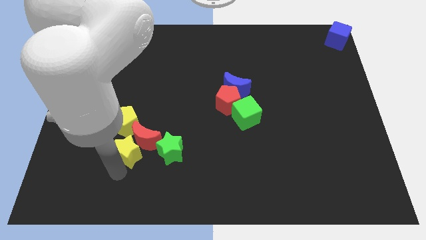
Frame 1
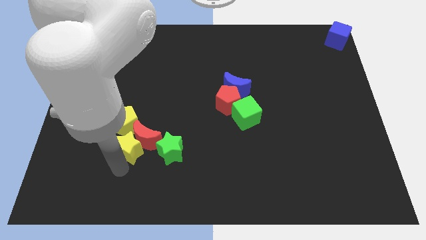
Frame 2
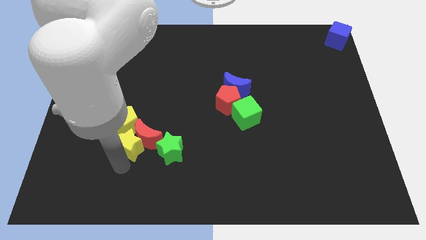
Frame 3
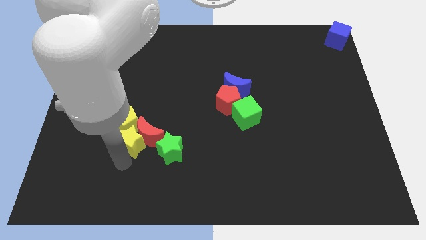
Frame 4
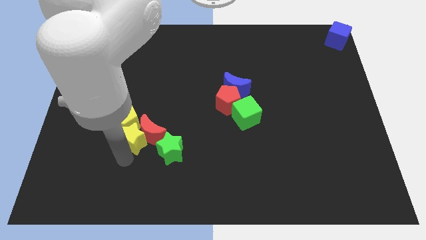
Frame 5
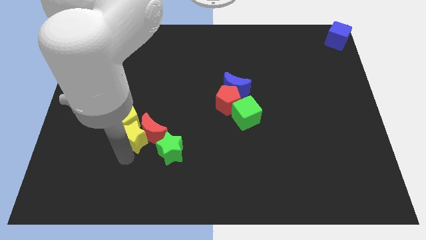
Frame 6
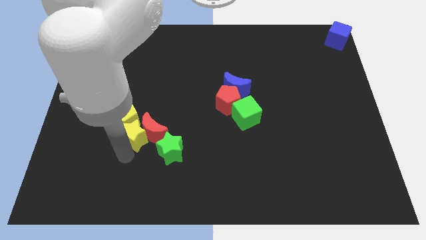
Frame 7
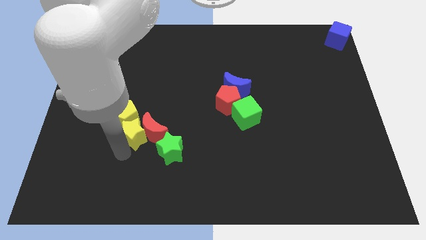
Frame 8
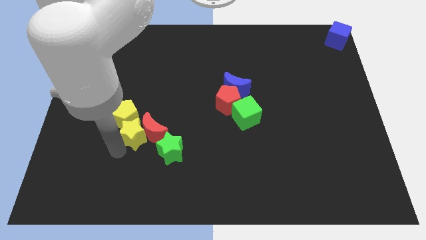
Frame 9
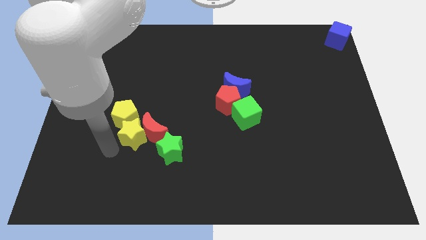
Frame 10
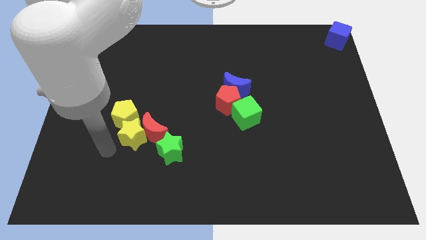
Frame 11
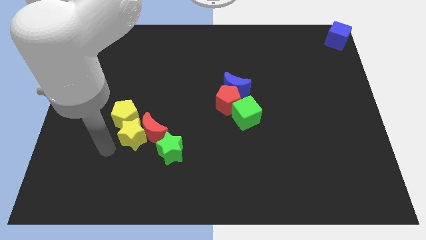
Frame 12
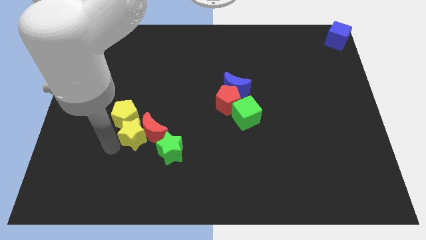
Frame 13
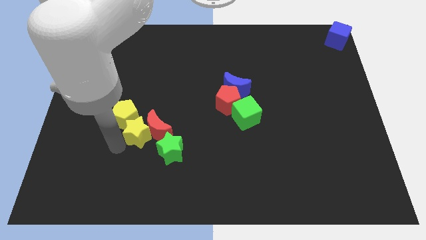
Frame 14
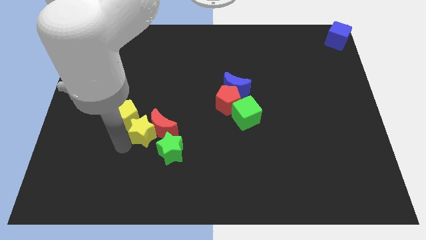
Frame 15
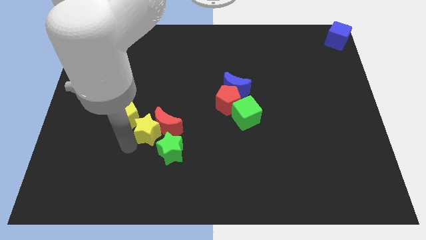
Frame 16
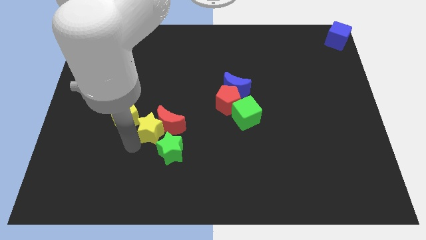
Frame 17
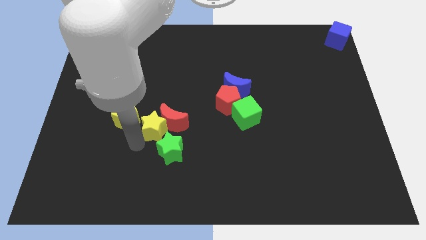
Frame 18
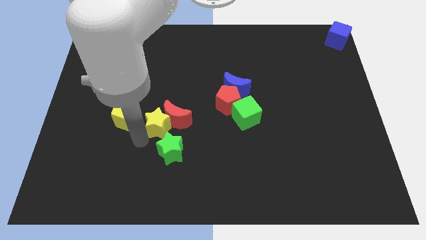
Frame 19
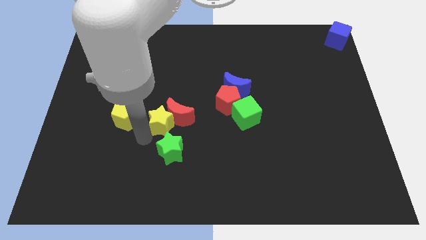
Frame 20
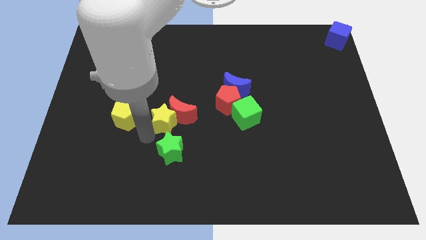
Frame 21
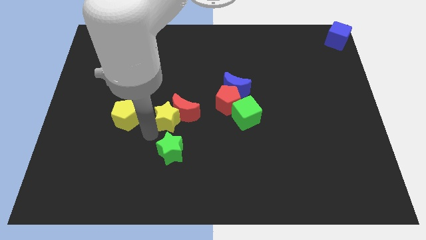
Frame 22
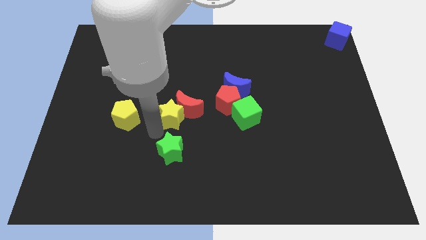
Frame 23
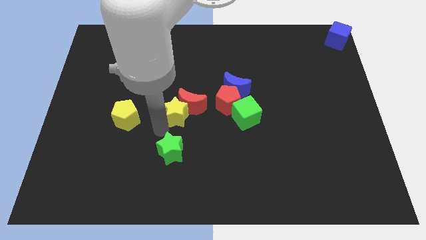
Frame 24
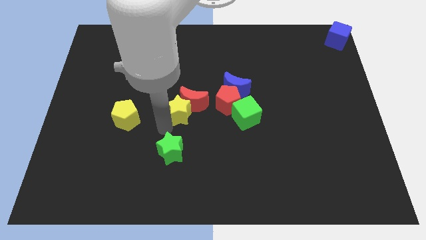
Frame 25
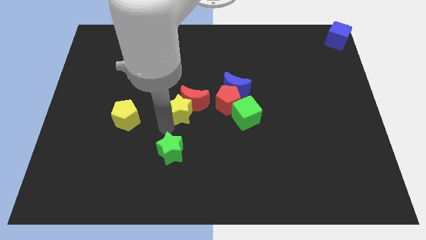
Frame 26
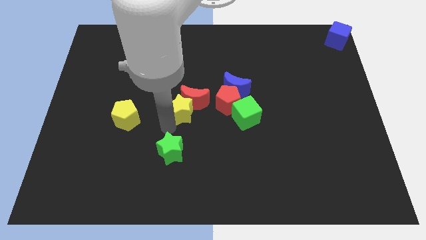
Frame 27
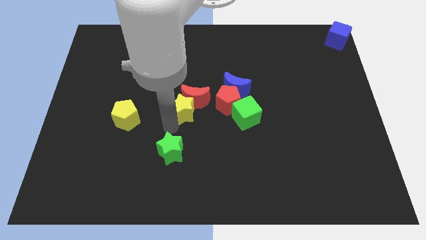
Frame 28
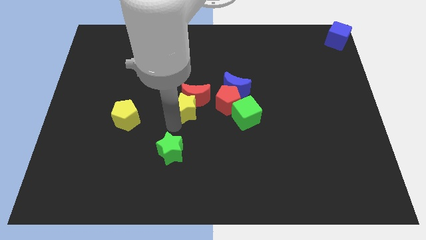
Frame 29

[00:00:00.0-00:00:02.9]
push the yellow star along with red moon towards center of the board

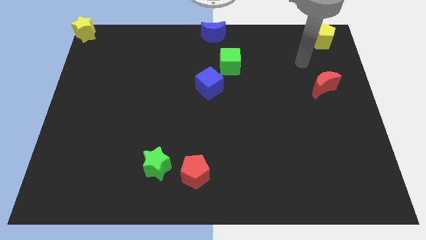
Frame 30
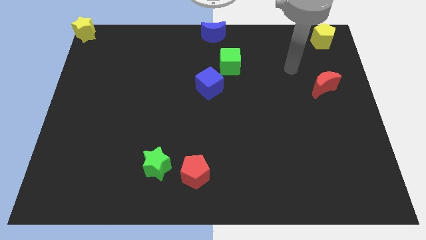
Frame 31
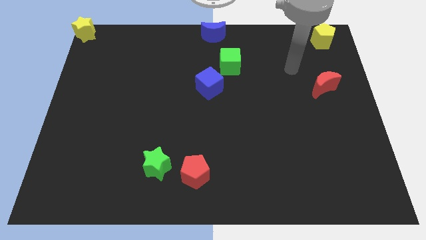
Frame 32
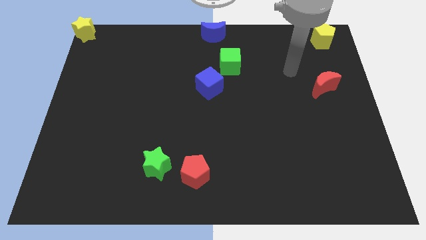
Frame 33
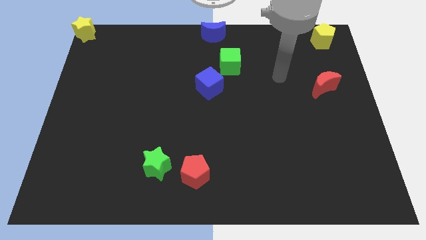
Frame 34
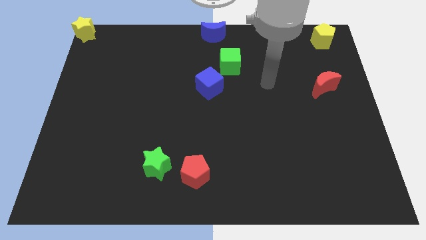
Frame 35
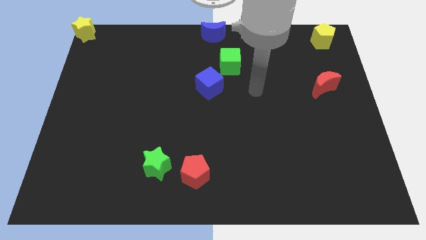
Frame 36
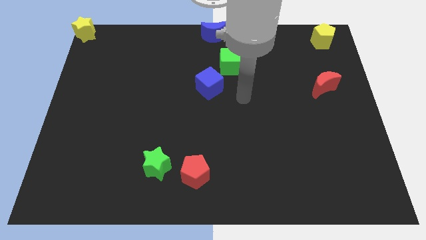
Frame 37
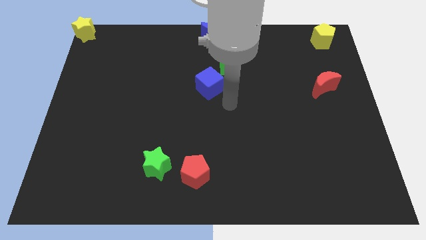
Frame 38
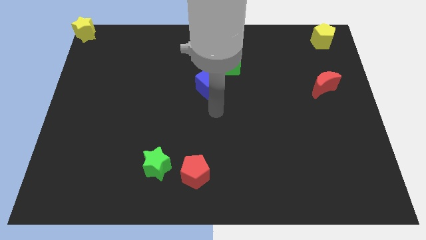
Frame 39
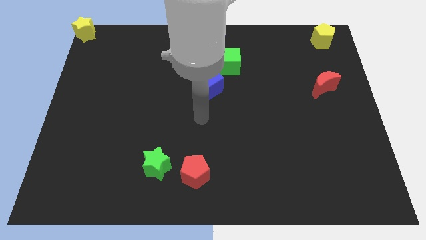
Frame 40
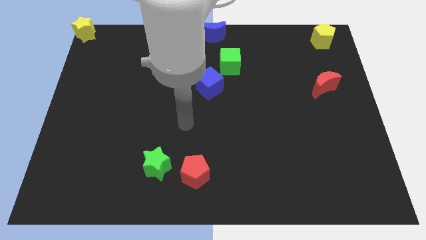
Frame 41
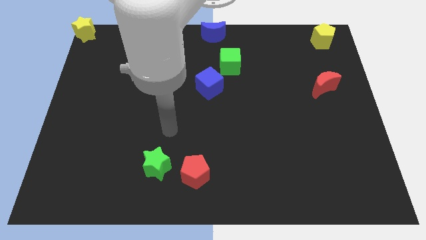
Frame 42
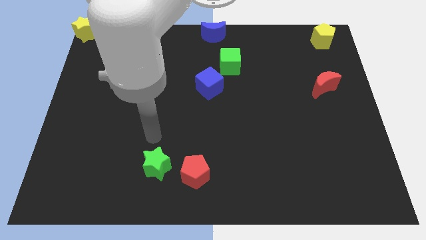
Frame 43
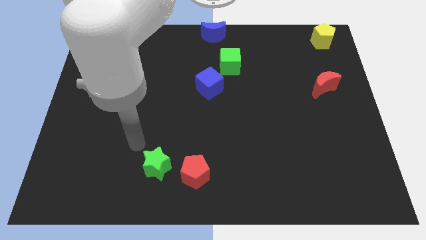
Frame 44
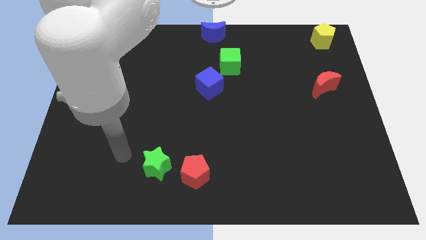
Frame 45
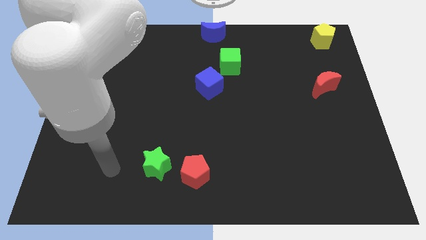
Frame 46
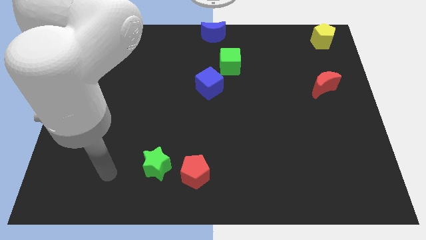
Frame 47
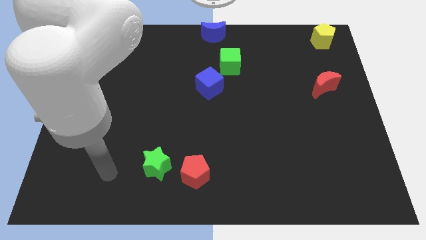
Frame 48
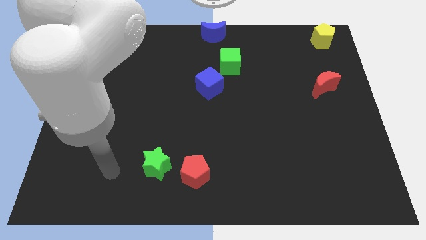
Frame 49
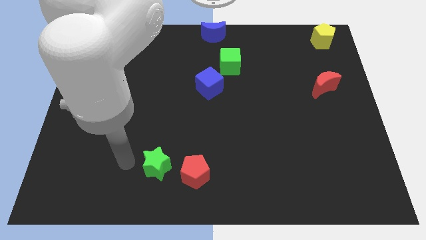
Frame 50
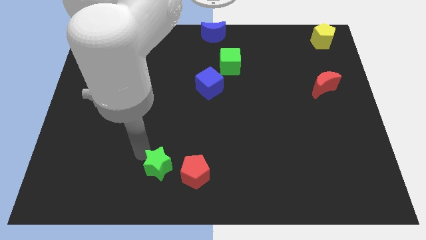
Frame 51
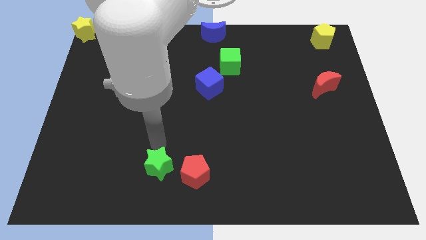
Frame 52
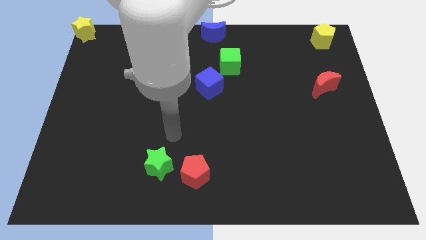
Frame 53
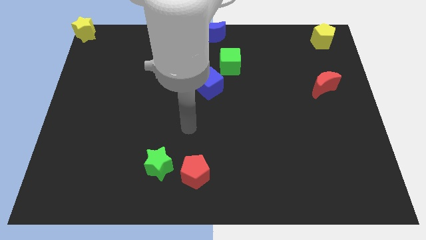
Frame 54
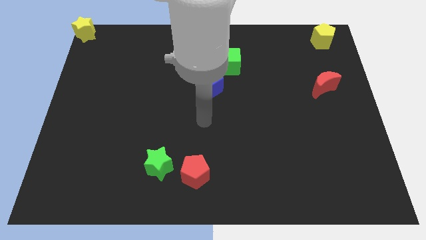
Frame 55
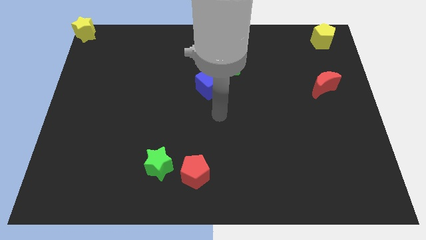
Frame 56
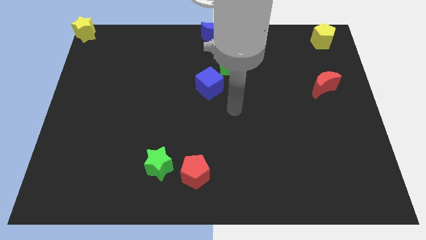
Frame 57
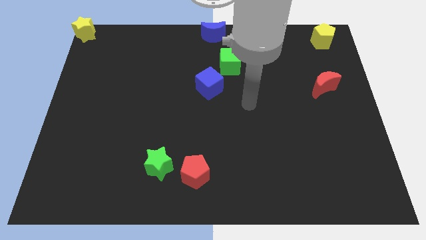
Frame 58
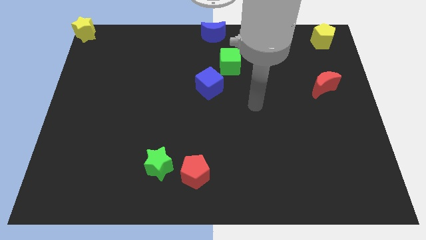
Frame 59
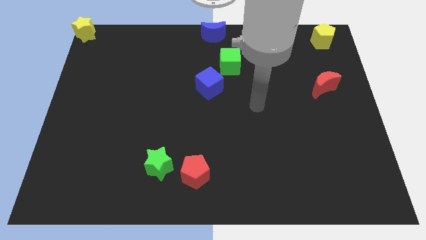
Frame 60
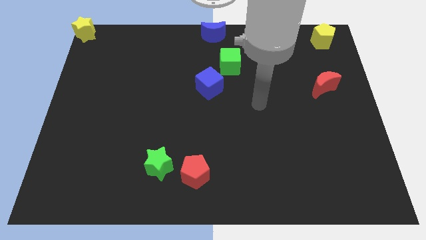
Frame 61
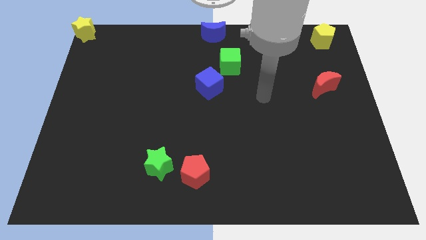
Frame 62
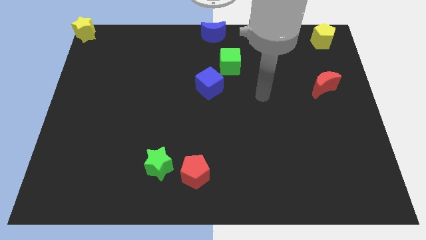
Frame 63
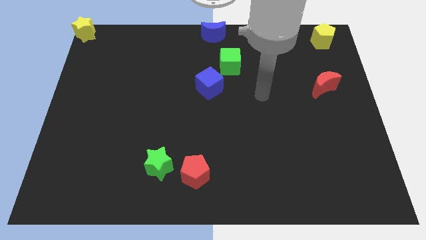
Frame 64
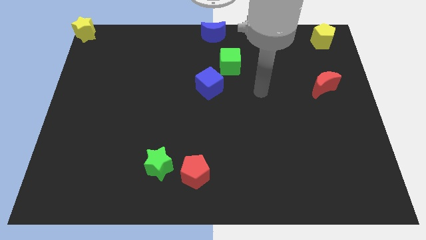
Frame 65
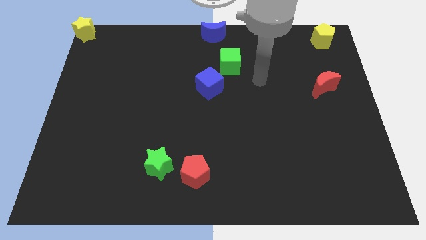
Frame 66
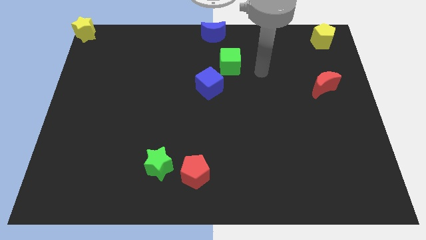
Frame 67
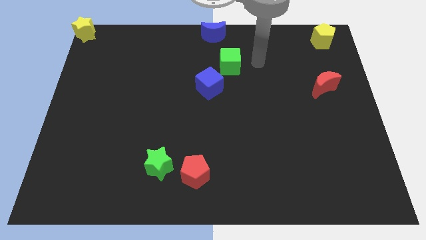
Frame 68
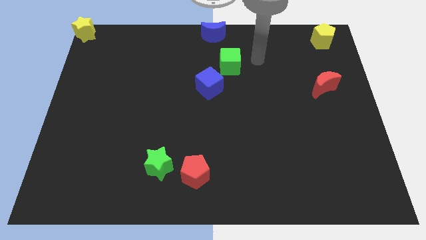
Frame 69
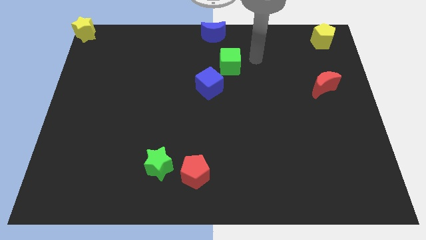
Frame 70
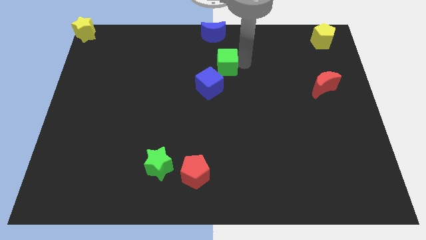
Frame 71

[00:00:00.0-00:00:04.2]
place your arm to the right of green cube

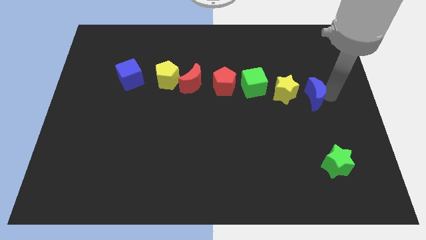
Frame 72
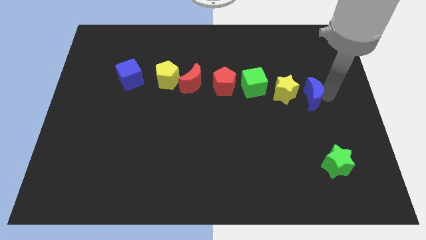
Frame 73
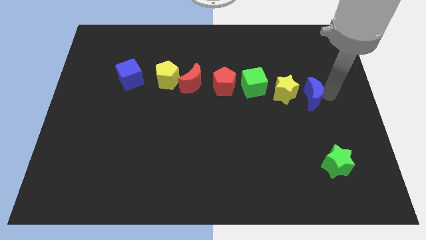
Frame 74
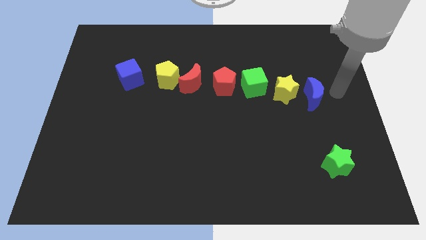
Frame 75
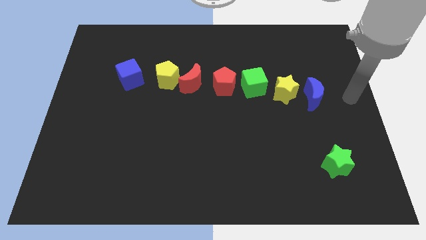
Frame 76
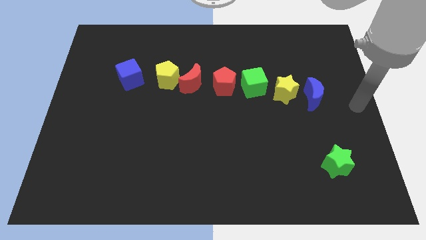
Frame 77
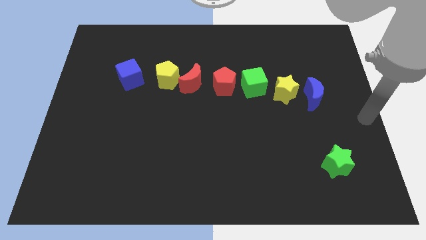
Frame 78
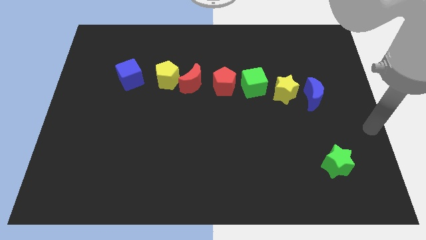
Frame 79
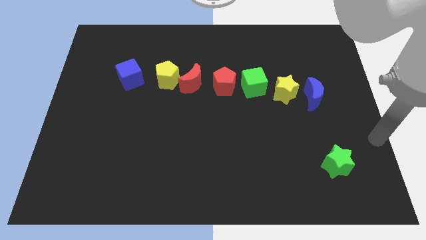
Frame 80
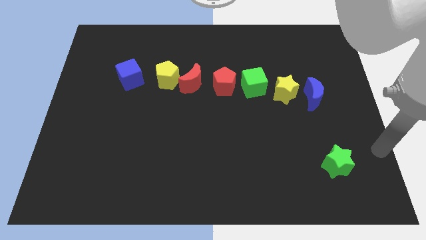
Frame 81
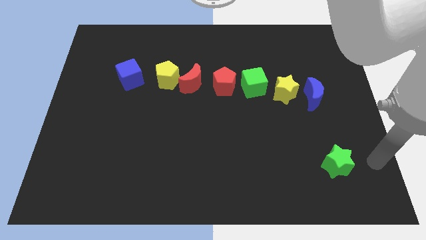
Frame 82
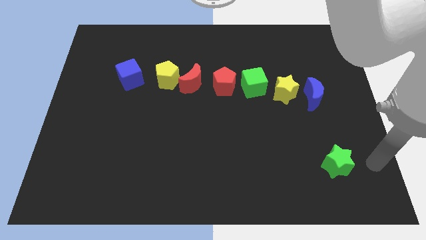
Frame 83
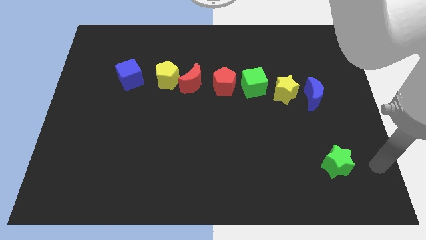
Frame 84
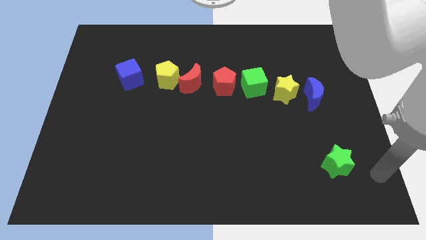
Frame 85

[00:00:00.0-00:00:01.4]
go away from the blue moon

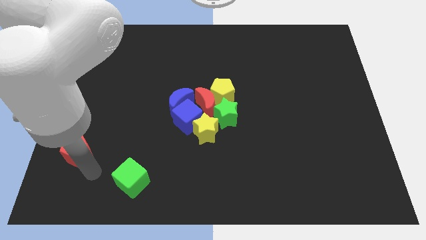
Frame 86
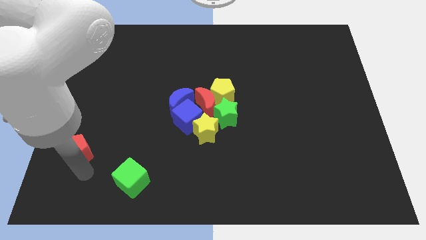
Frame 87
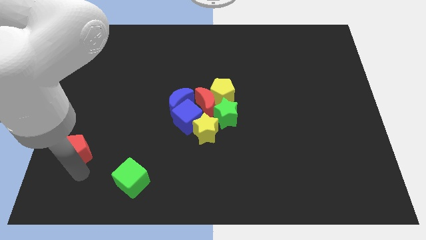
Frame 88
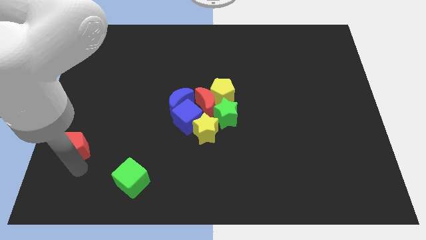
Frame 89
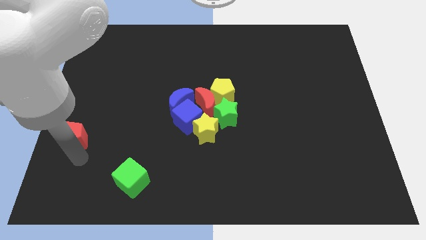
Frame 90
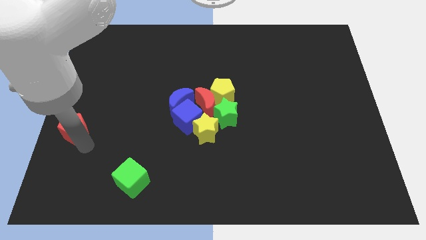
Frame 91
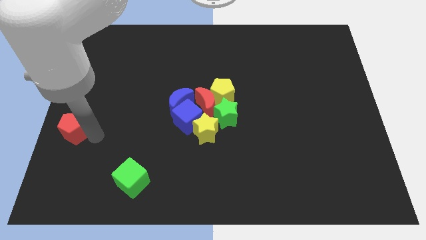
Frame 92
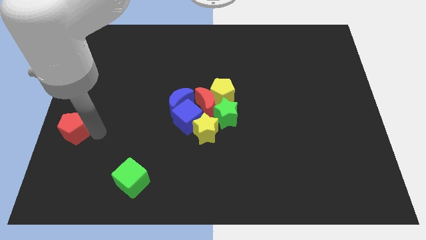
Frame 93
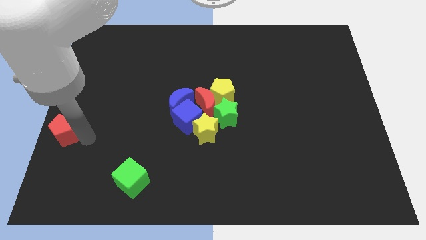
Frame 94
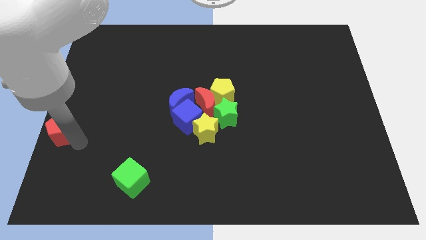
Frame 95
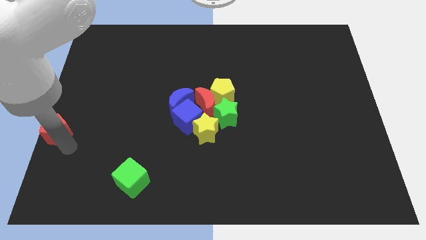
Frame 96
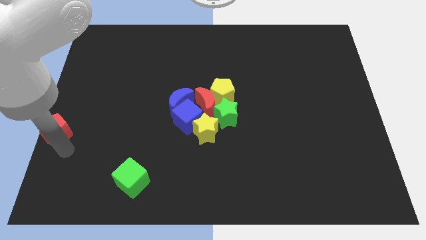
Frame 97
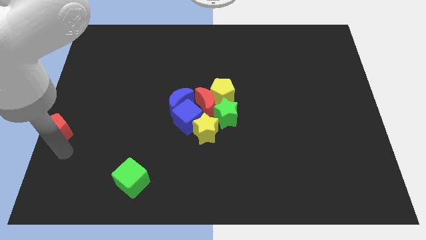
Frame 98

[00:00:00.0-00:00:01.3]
push the red pentagon towards the left center of the board
